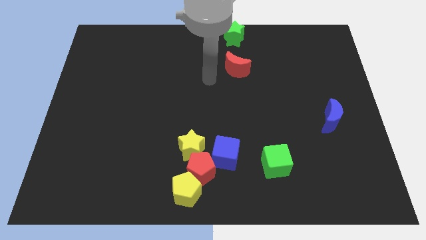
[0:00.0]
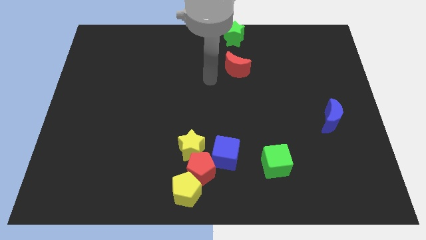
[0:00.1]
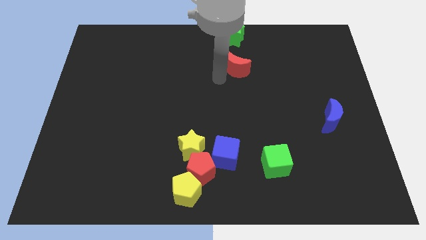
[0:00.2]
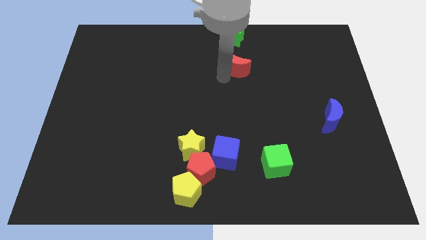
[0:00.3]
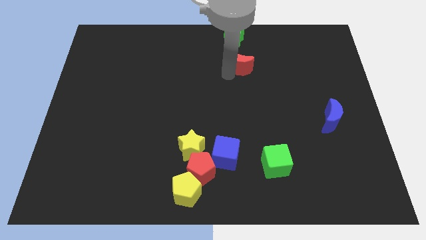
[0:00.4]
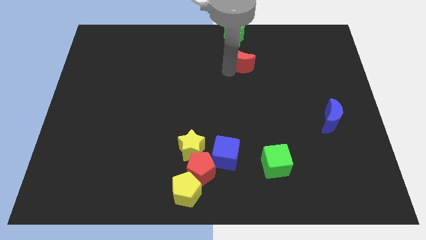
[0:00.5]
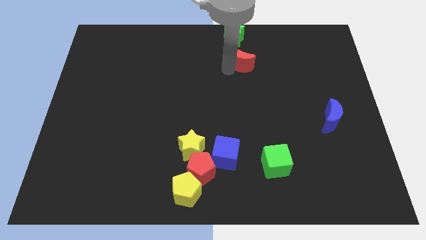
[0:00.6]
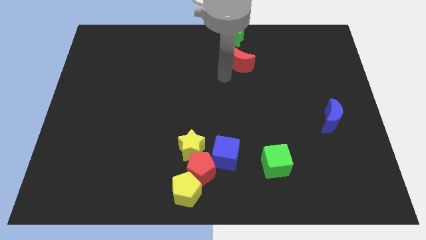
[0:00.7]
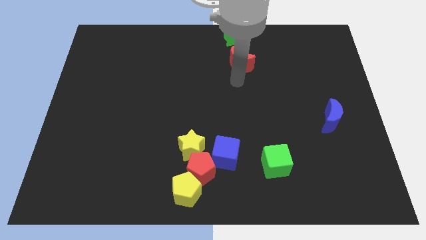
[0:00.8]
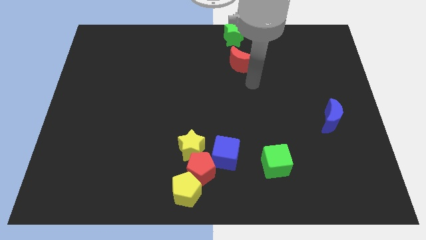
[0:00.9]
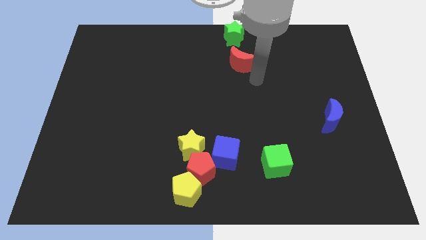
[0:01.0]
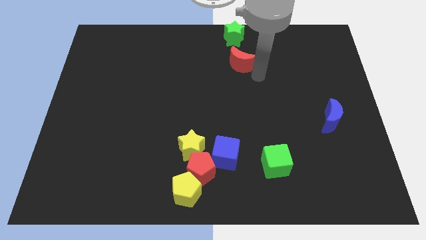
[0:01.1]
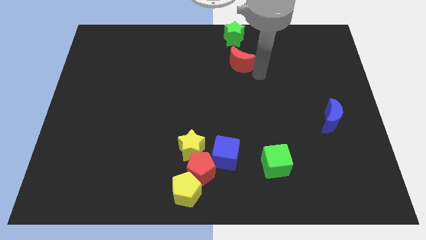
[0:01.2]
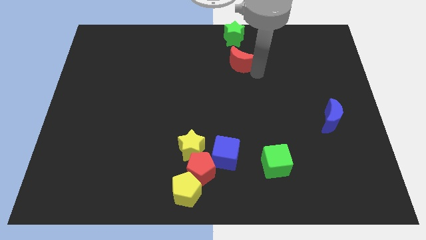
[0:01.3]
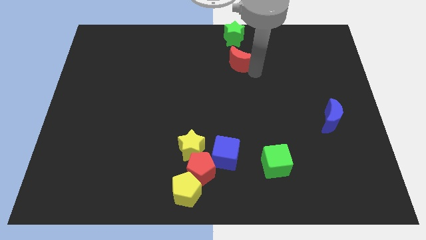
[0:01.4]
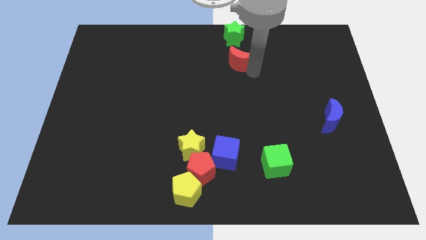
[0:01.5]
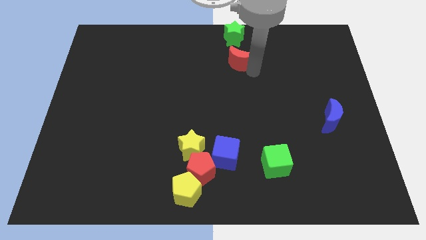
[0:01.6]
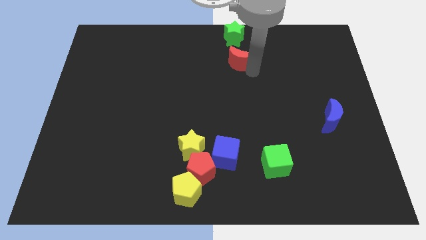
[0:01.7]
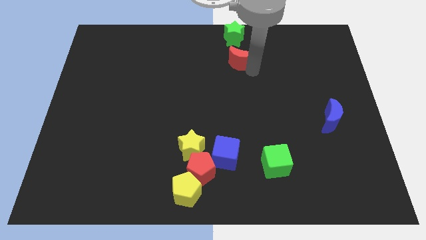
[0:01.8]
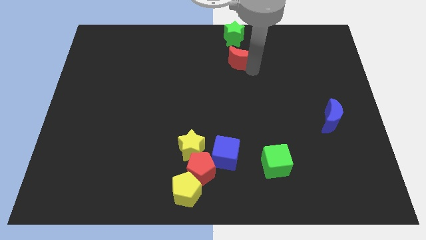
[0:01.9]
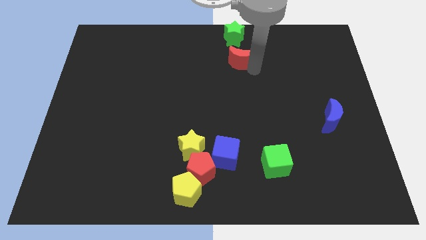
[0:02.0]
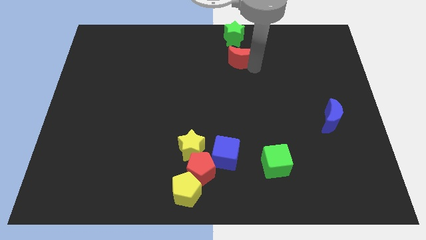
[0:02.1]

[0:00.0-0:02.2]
place the red moon below the green star

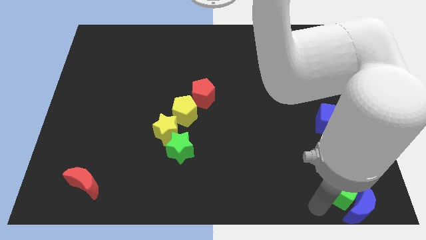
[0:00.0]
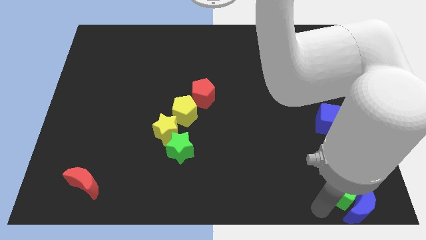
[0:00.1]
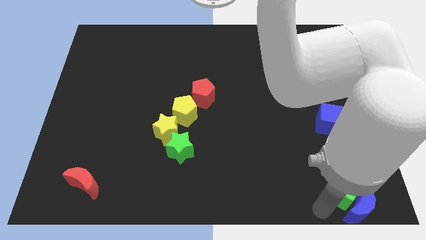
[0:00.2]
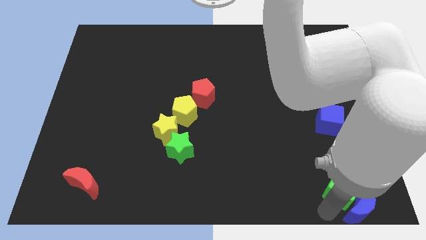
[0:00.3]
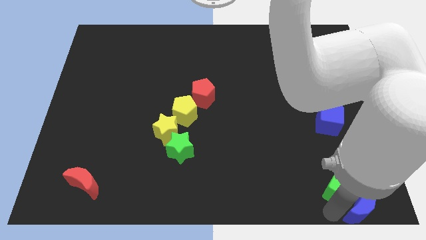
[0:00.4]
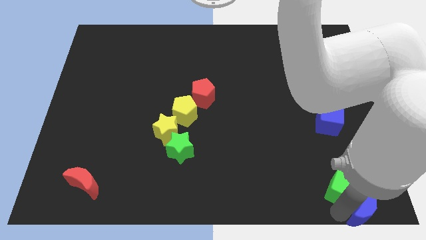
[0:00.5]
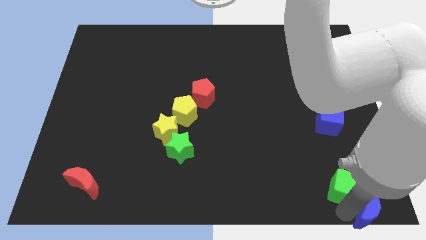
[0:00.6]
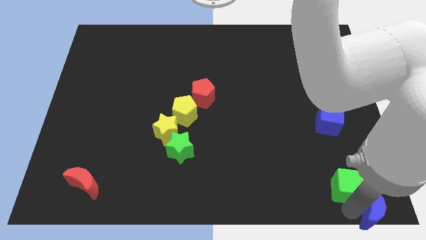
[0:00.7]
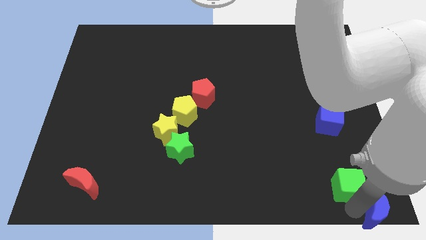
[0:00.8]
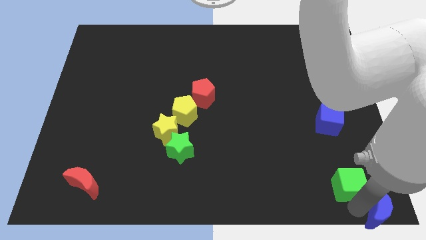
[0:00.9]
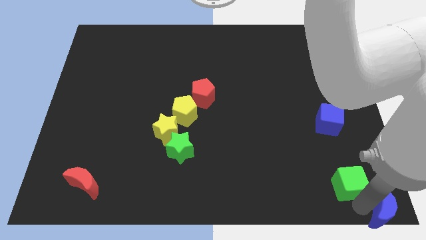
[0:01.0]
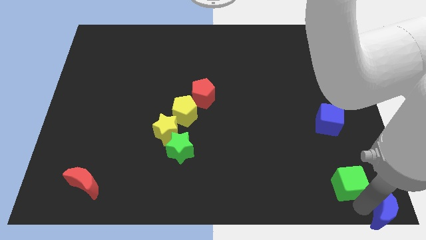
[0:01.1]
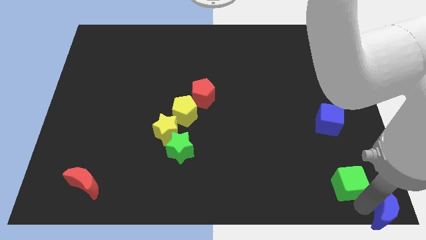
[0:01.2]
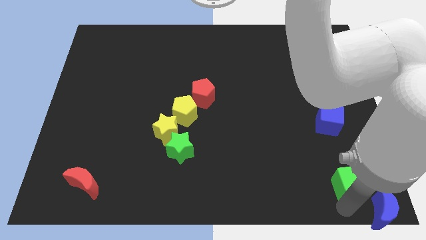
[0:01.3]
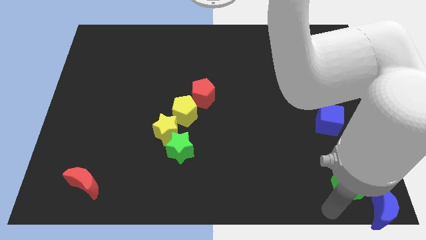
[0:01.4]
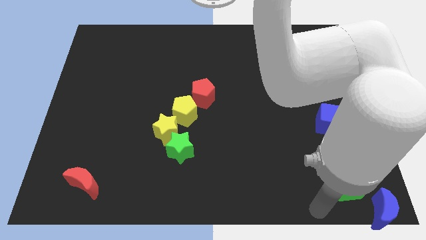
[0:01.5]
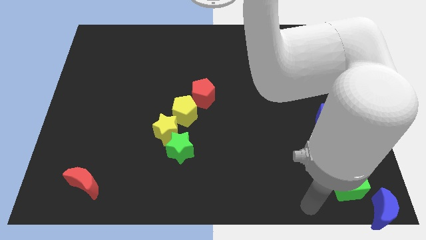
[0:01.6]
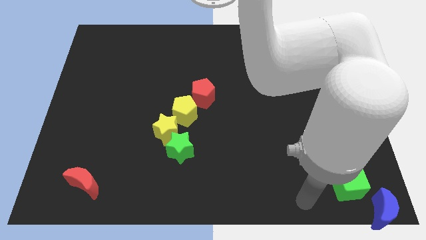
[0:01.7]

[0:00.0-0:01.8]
separate the blue crescent and green cube from each other

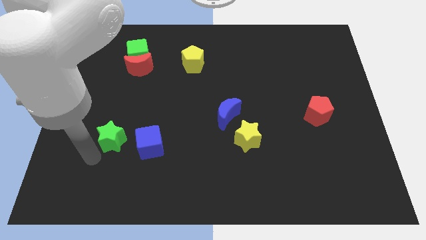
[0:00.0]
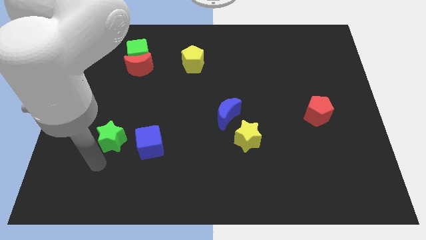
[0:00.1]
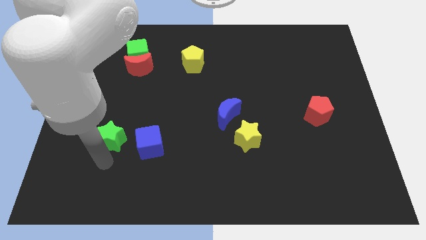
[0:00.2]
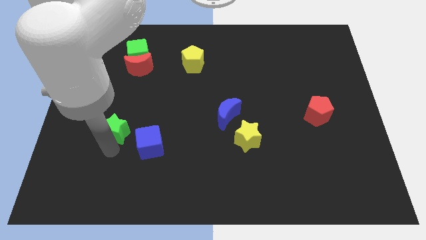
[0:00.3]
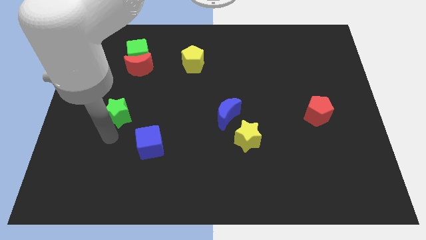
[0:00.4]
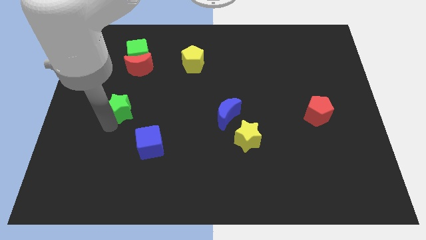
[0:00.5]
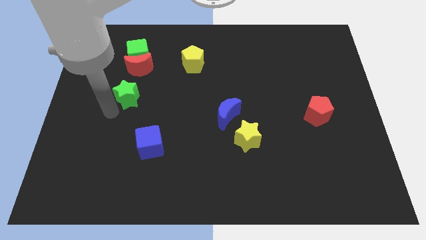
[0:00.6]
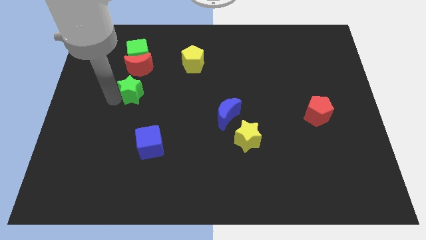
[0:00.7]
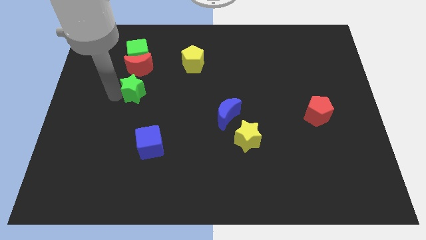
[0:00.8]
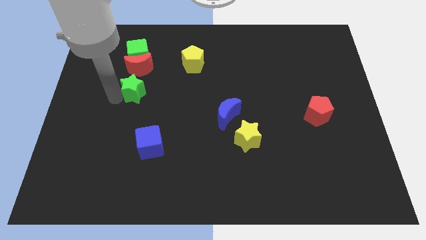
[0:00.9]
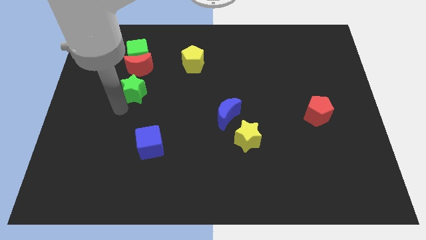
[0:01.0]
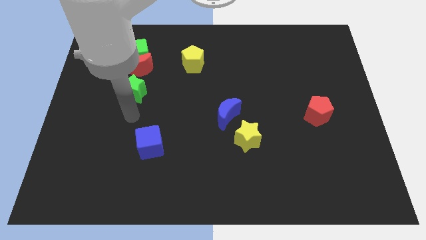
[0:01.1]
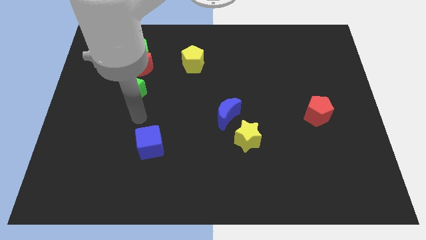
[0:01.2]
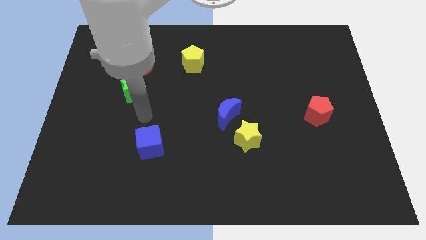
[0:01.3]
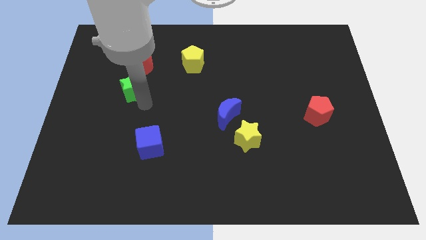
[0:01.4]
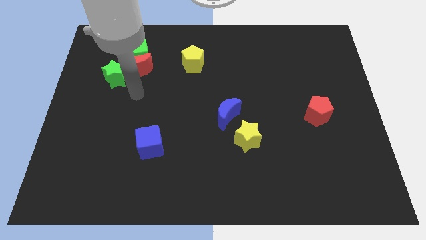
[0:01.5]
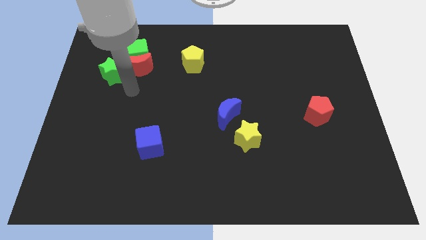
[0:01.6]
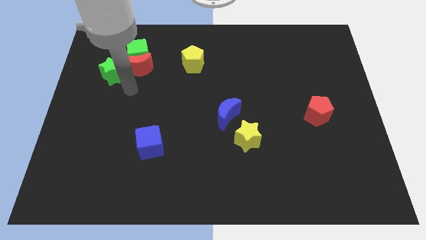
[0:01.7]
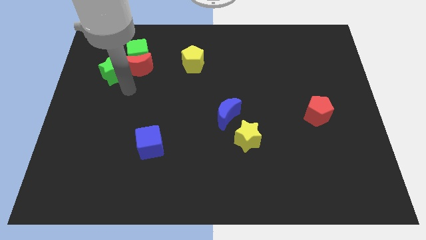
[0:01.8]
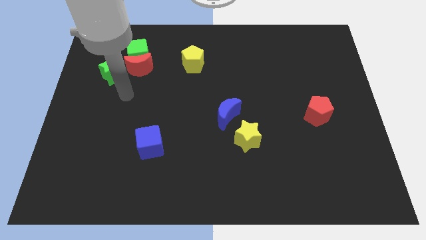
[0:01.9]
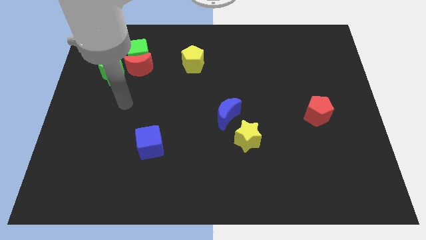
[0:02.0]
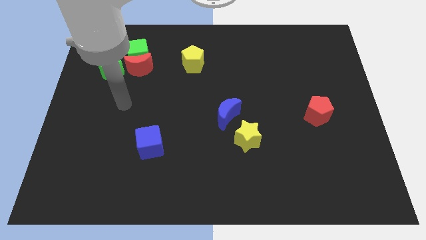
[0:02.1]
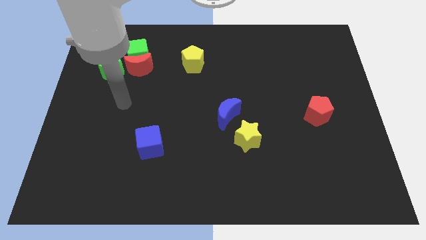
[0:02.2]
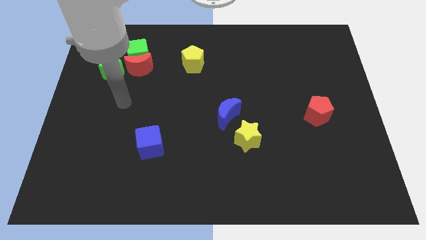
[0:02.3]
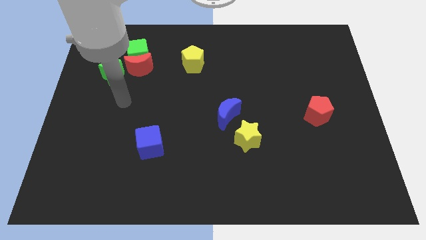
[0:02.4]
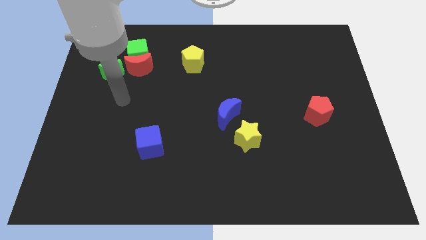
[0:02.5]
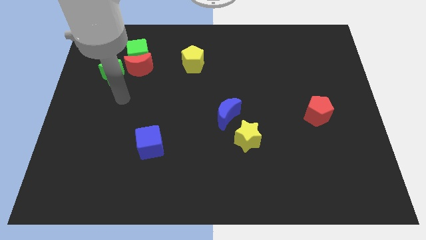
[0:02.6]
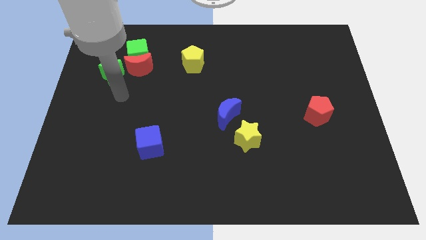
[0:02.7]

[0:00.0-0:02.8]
move the green star close to the red moon

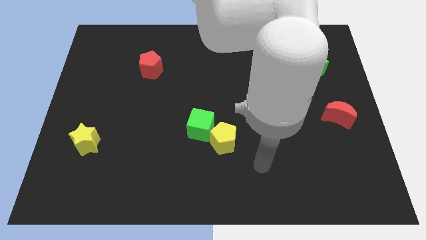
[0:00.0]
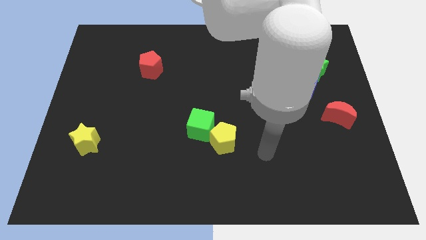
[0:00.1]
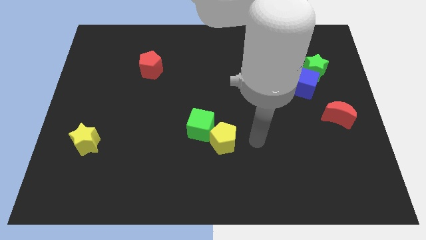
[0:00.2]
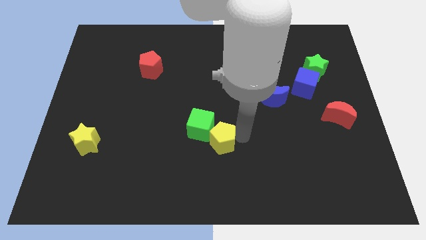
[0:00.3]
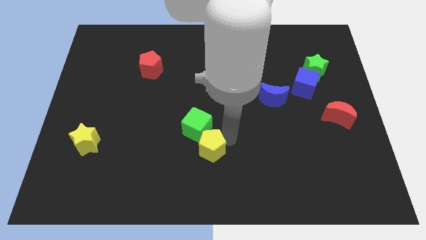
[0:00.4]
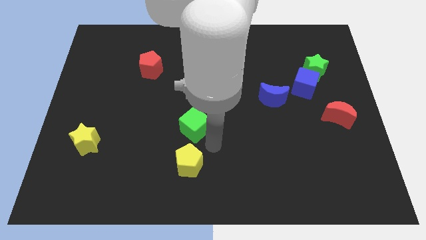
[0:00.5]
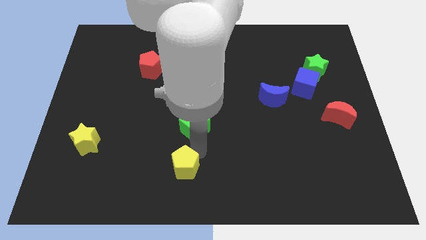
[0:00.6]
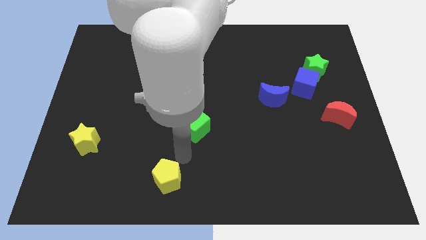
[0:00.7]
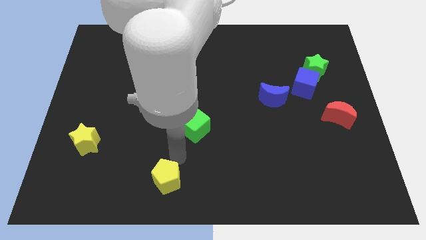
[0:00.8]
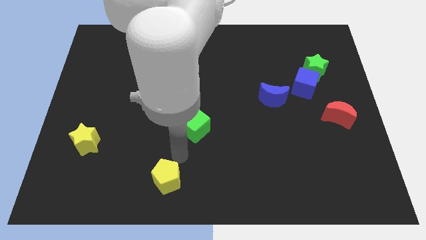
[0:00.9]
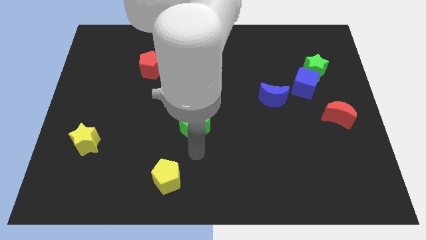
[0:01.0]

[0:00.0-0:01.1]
separate yellow pentagon from green cube

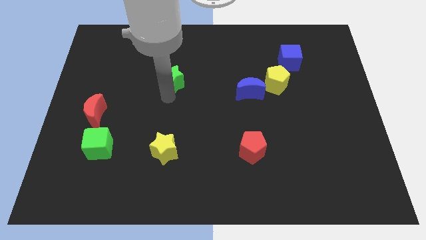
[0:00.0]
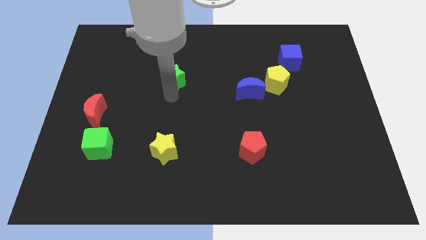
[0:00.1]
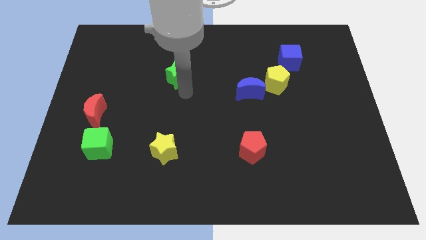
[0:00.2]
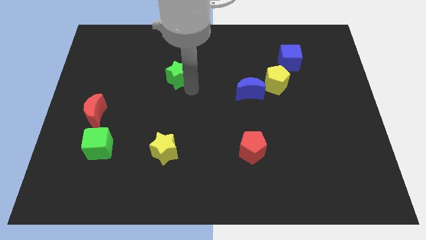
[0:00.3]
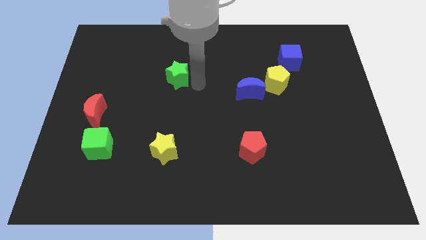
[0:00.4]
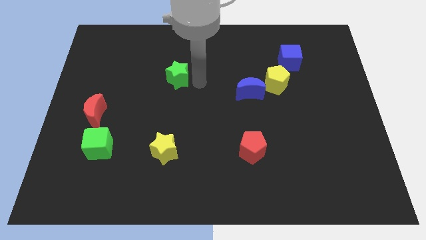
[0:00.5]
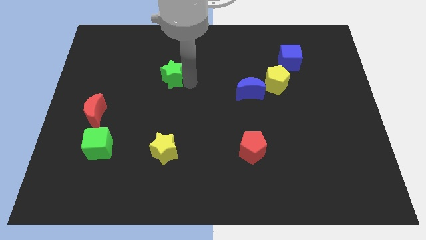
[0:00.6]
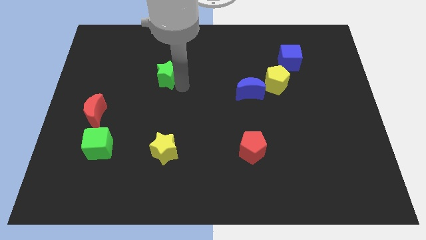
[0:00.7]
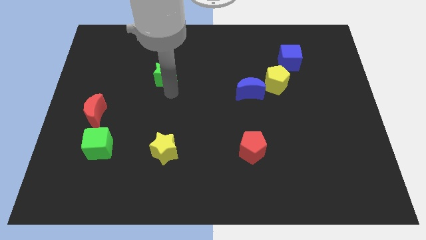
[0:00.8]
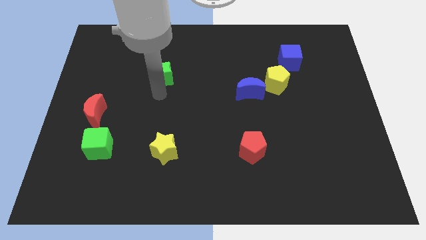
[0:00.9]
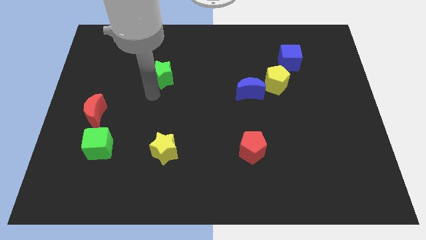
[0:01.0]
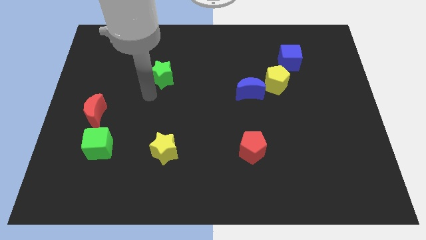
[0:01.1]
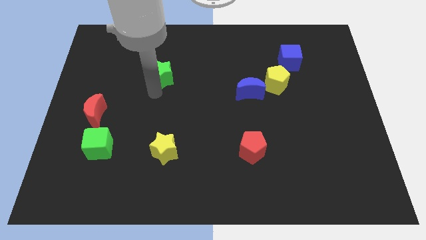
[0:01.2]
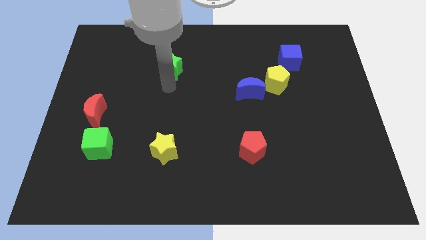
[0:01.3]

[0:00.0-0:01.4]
push the green star slightly to the top of the board
